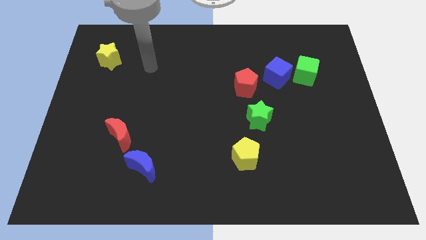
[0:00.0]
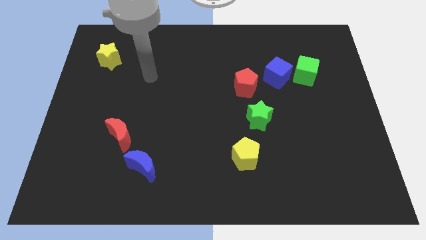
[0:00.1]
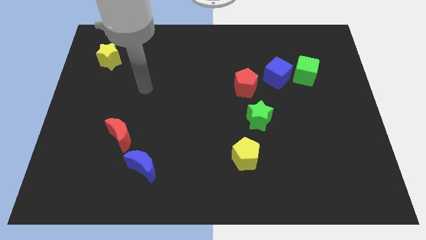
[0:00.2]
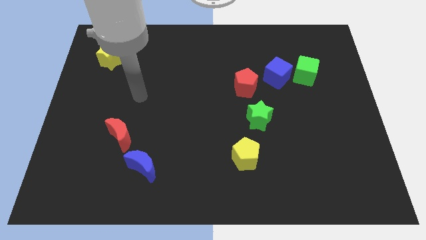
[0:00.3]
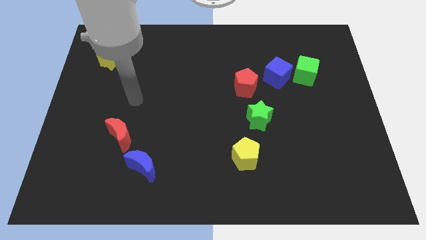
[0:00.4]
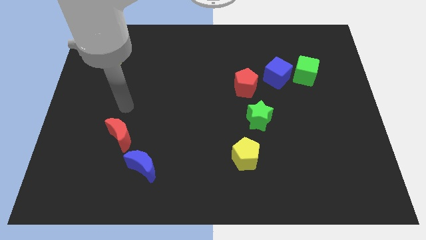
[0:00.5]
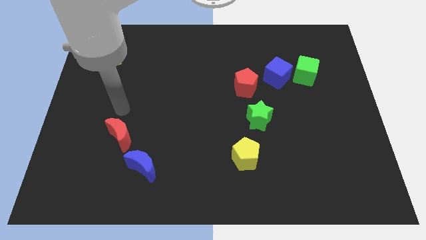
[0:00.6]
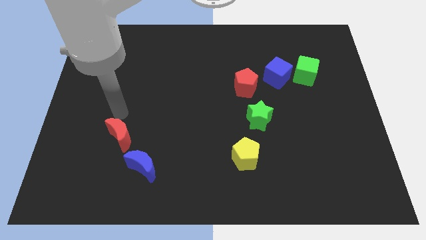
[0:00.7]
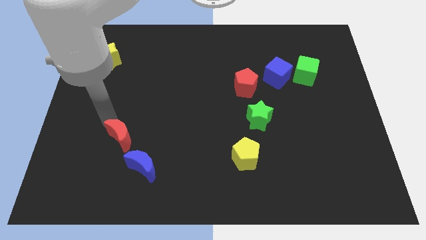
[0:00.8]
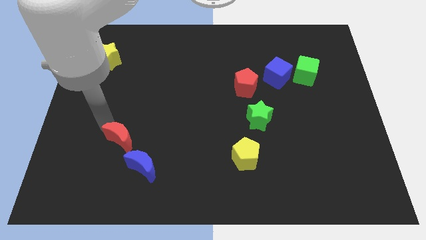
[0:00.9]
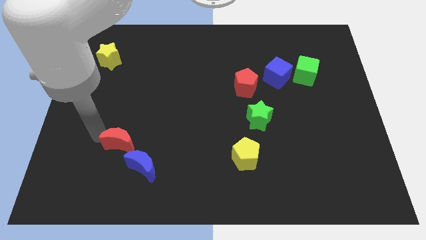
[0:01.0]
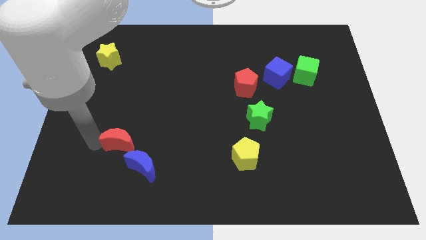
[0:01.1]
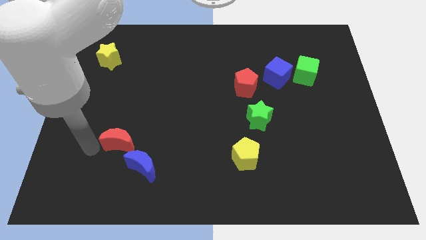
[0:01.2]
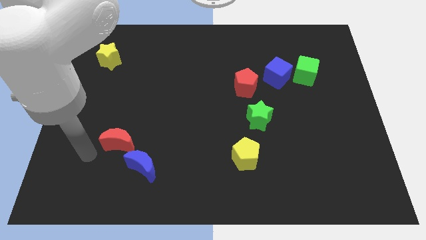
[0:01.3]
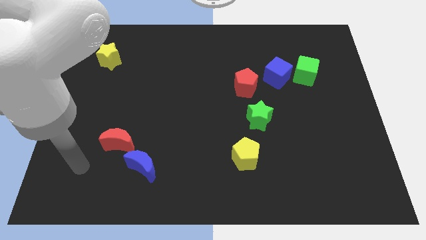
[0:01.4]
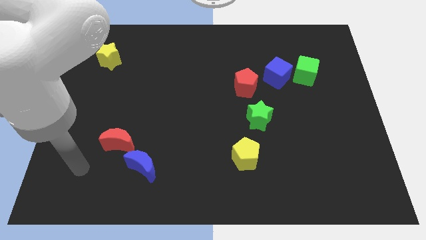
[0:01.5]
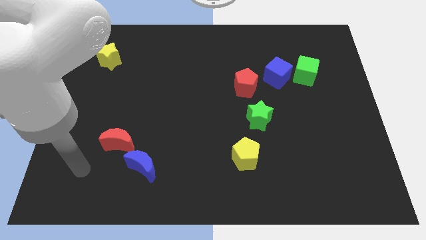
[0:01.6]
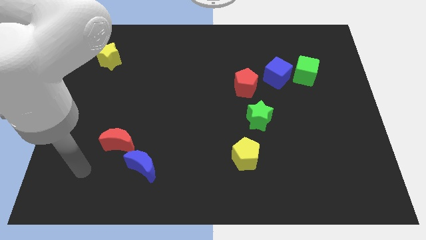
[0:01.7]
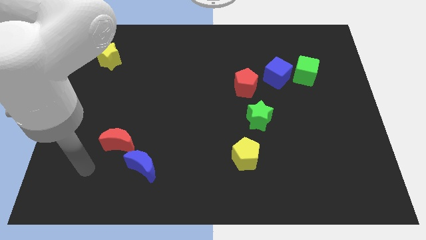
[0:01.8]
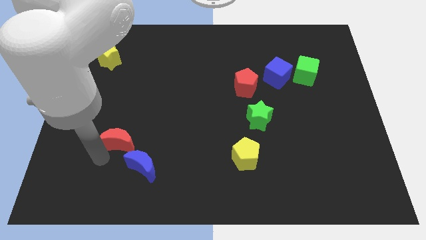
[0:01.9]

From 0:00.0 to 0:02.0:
move your arm towards the red crescent

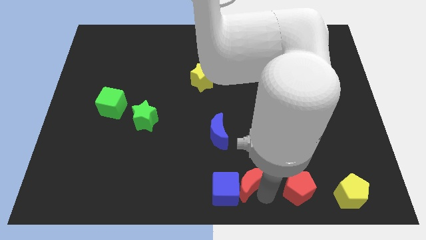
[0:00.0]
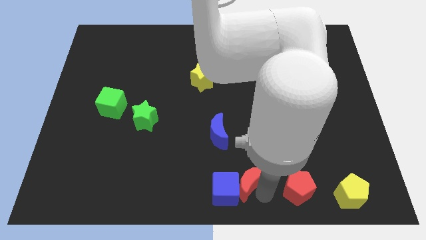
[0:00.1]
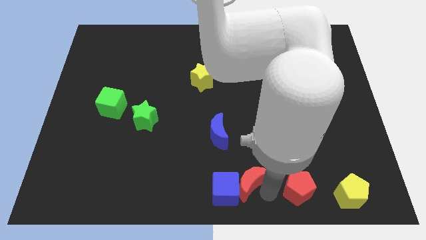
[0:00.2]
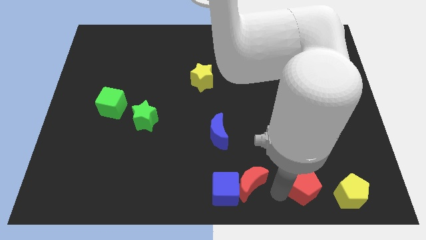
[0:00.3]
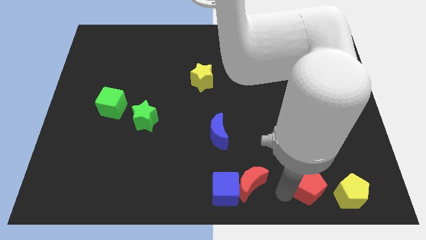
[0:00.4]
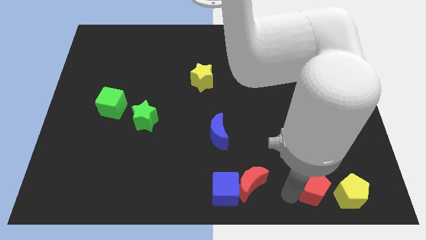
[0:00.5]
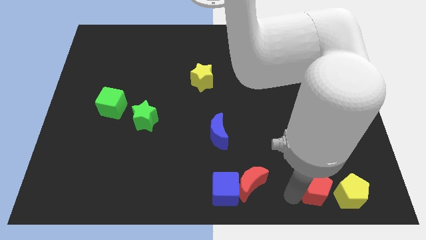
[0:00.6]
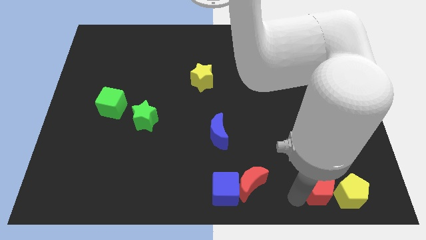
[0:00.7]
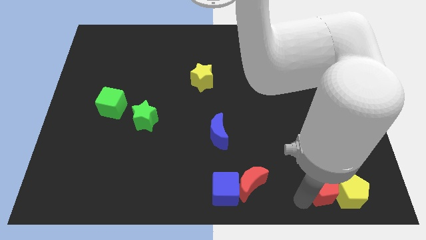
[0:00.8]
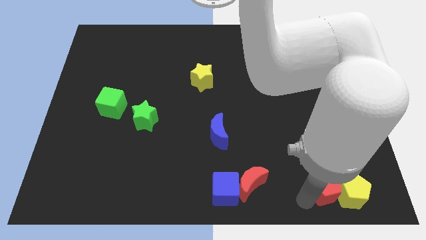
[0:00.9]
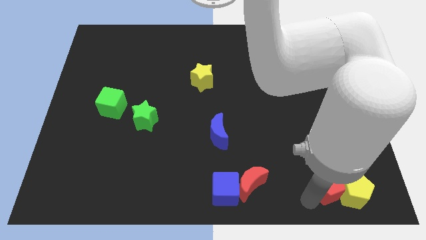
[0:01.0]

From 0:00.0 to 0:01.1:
add red pentagon into yellow pentagon

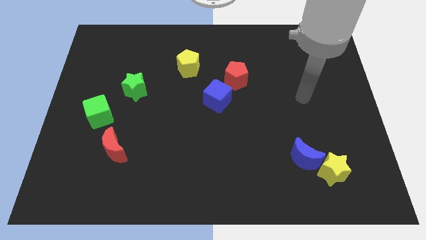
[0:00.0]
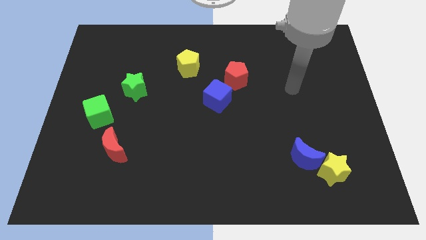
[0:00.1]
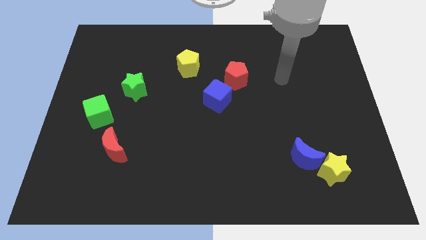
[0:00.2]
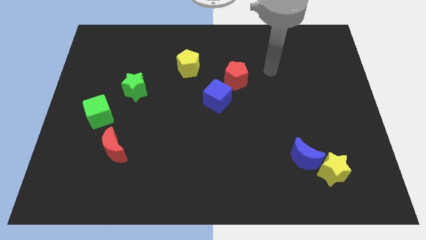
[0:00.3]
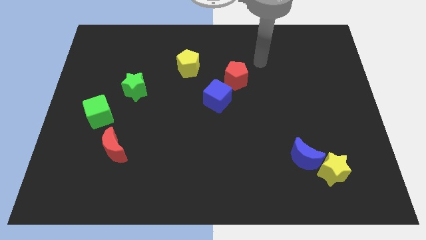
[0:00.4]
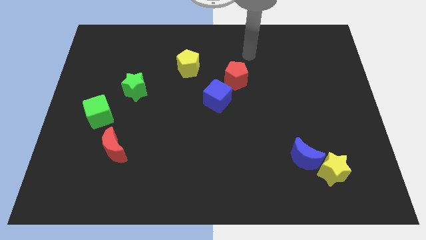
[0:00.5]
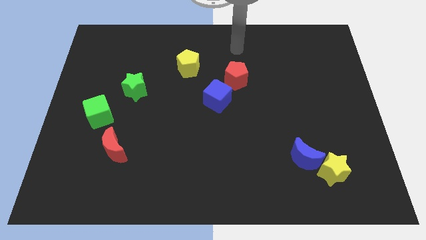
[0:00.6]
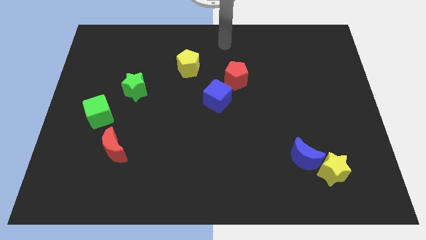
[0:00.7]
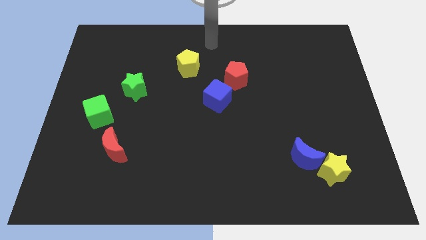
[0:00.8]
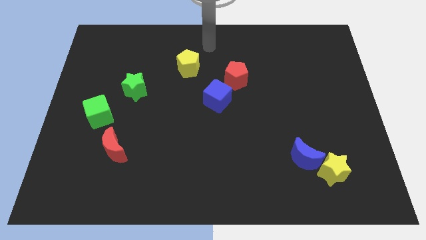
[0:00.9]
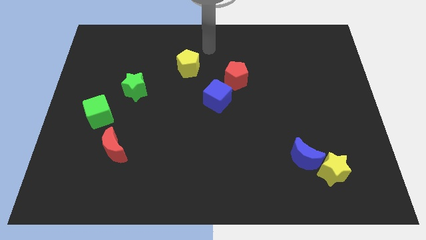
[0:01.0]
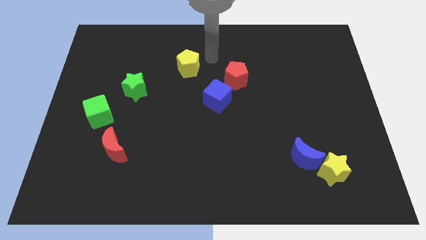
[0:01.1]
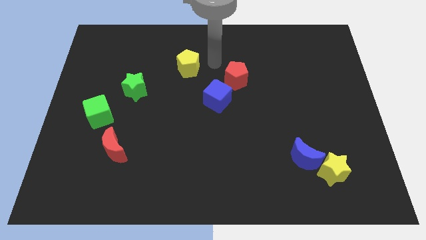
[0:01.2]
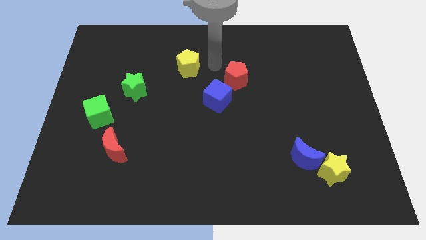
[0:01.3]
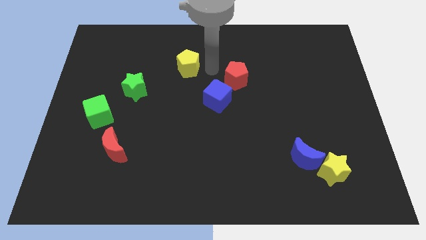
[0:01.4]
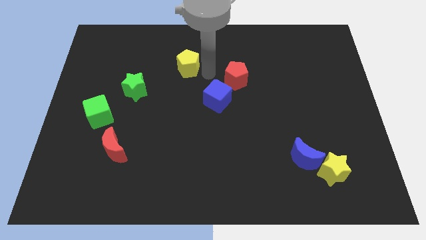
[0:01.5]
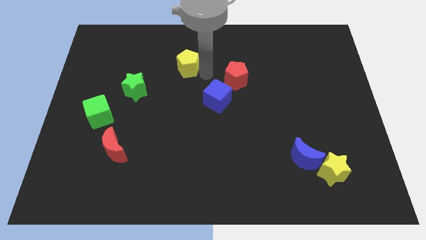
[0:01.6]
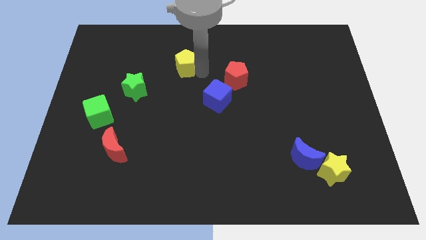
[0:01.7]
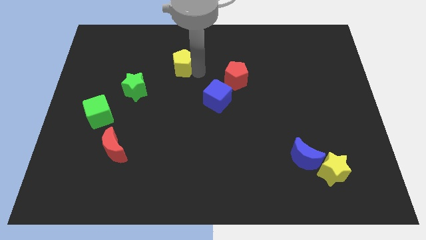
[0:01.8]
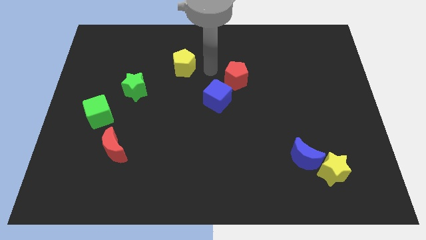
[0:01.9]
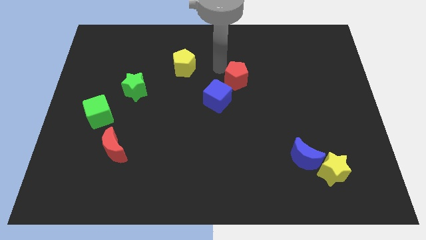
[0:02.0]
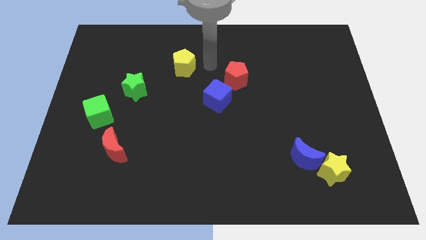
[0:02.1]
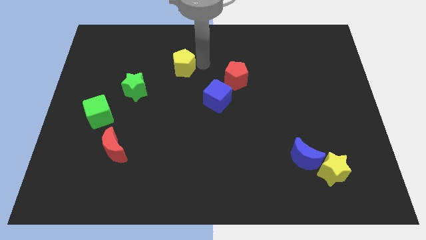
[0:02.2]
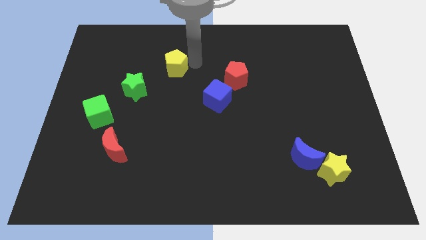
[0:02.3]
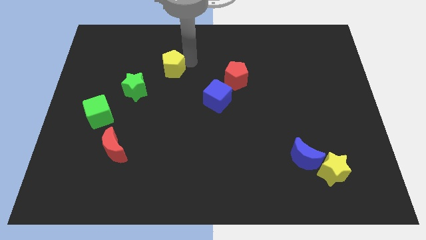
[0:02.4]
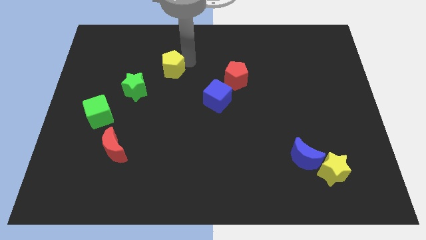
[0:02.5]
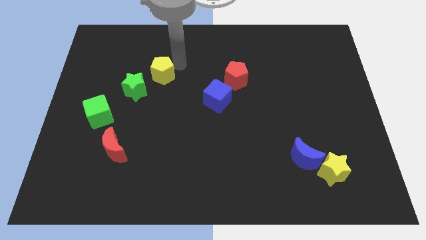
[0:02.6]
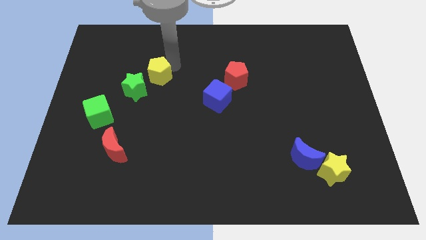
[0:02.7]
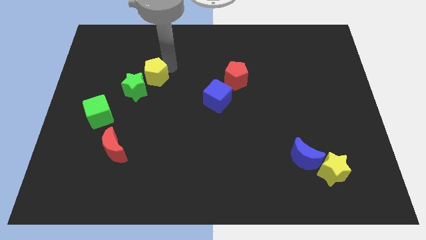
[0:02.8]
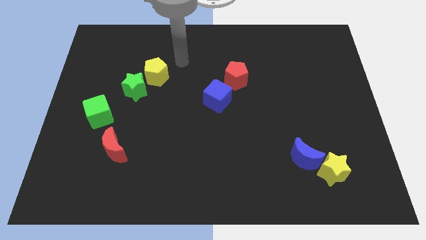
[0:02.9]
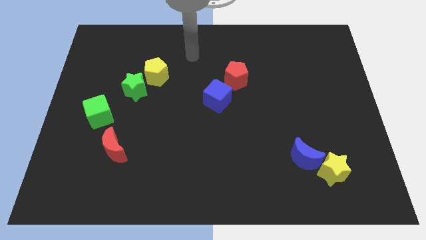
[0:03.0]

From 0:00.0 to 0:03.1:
place yellow pentagon to the top right of green star

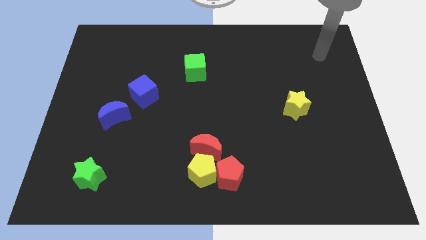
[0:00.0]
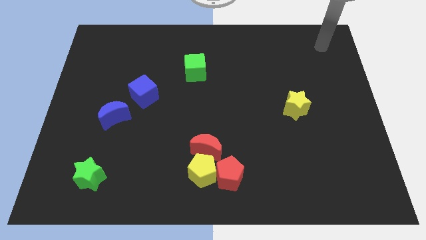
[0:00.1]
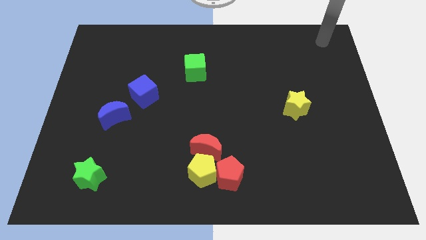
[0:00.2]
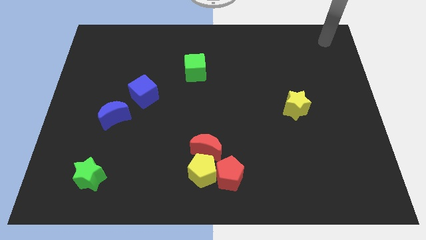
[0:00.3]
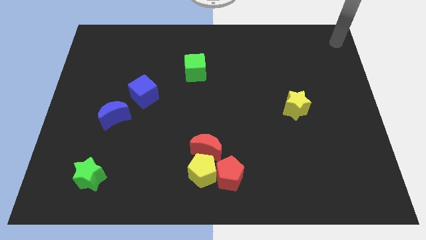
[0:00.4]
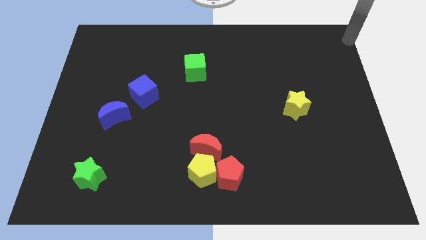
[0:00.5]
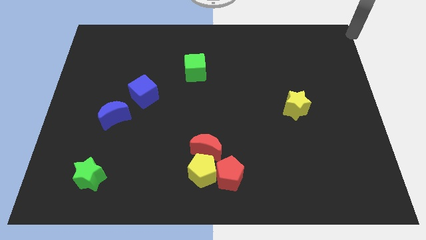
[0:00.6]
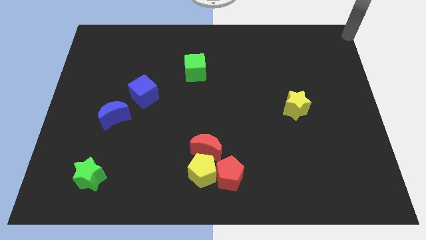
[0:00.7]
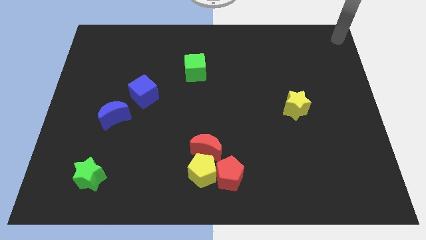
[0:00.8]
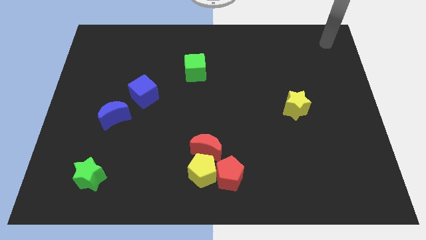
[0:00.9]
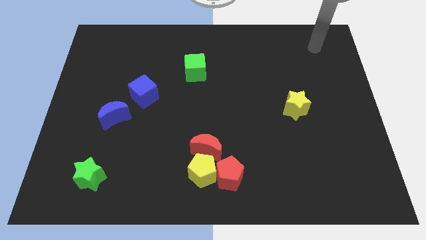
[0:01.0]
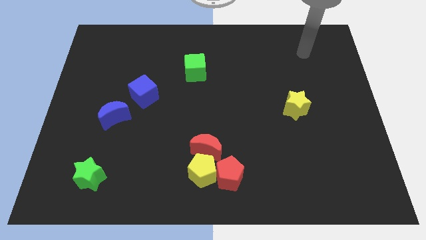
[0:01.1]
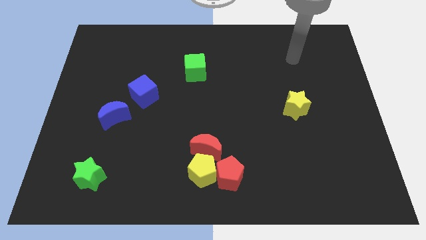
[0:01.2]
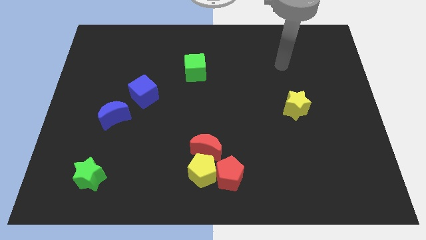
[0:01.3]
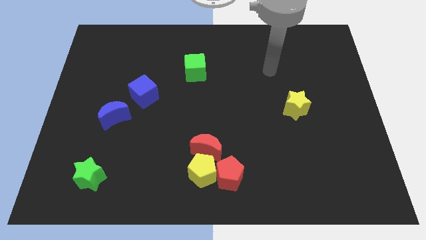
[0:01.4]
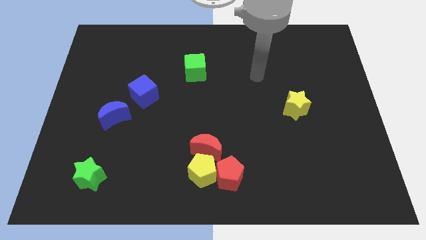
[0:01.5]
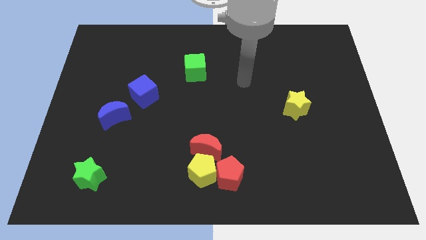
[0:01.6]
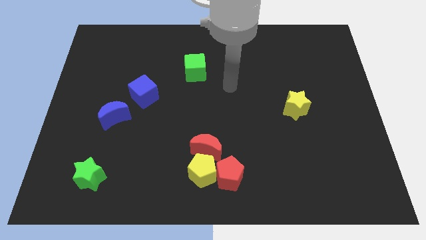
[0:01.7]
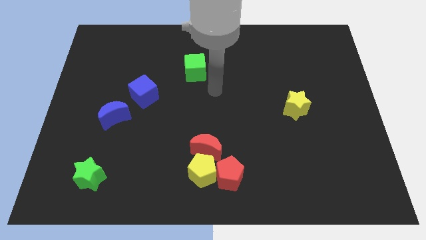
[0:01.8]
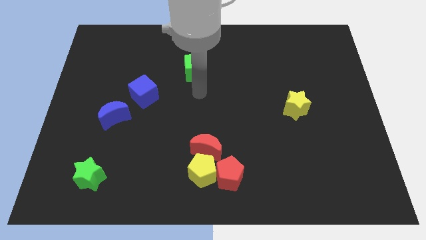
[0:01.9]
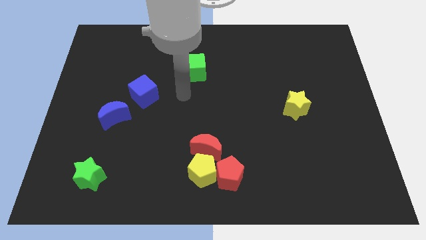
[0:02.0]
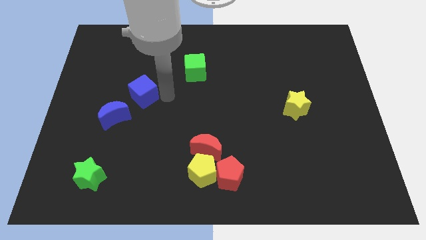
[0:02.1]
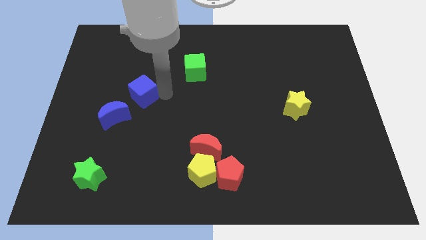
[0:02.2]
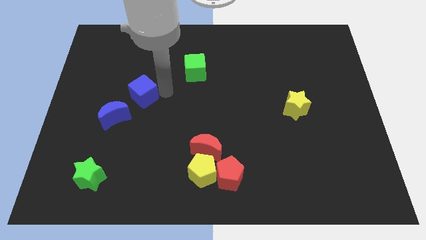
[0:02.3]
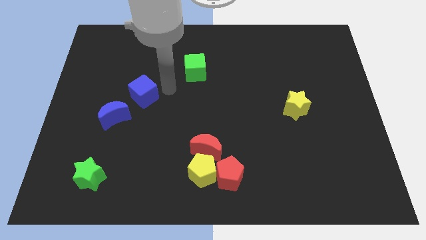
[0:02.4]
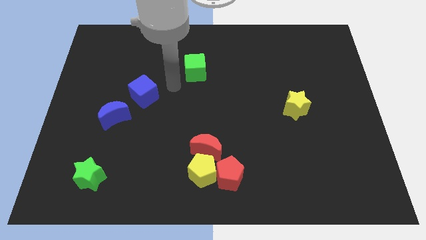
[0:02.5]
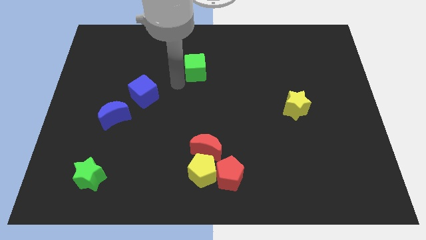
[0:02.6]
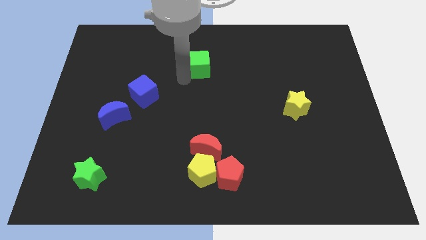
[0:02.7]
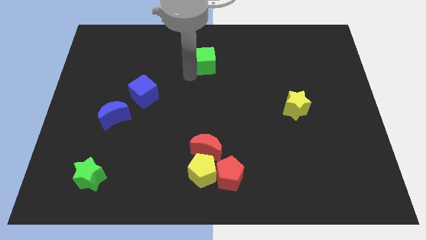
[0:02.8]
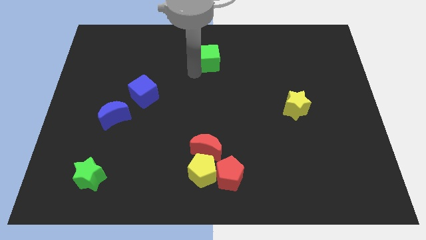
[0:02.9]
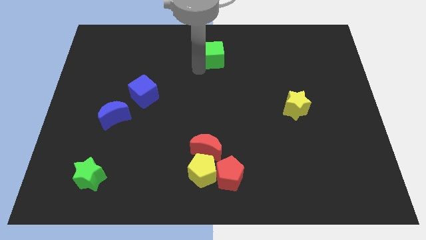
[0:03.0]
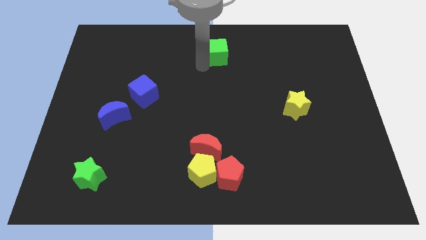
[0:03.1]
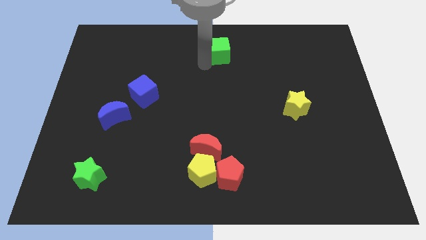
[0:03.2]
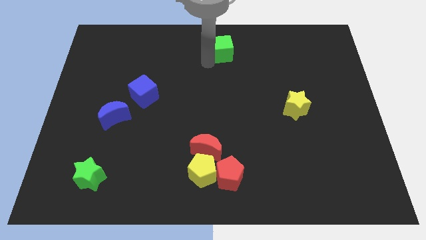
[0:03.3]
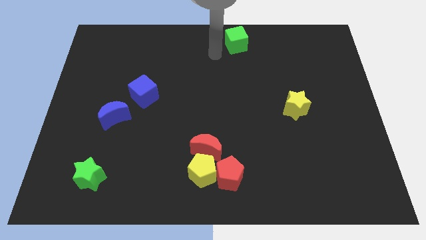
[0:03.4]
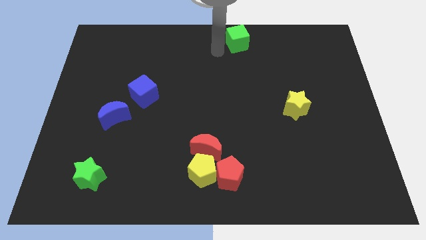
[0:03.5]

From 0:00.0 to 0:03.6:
slide the green cube to the top side of the table
